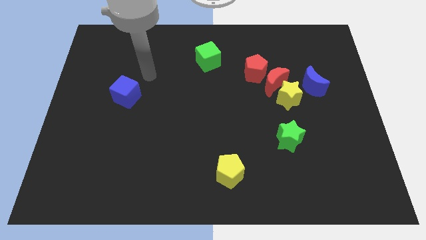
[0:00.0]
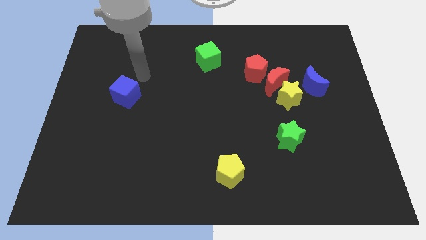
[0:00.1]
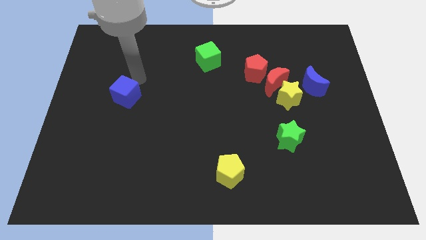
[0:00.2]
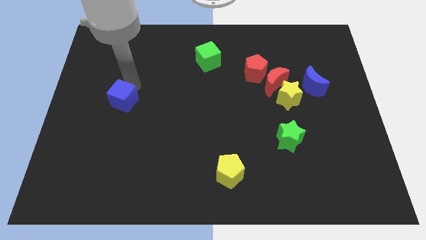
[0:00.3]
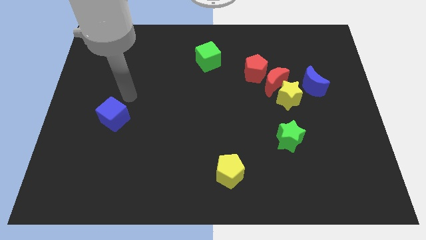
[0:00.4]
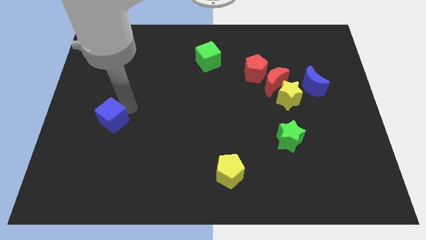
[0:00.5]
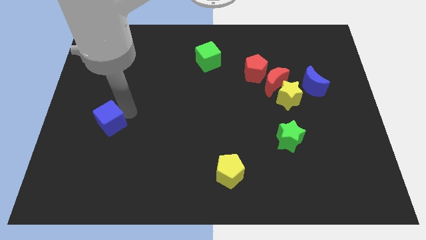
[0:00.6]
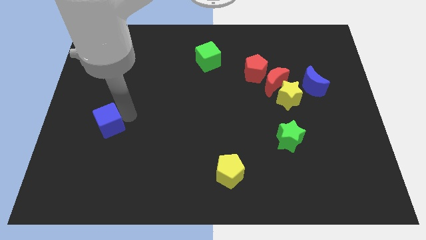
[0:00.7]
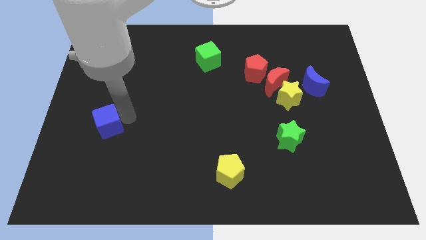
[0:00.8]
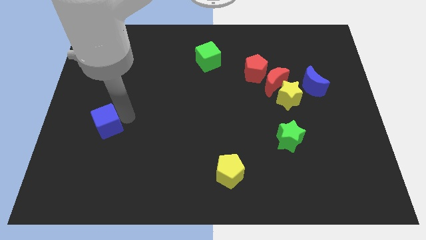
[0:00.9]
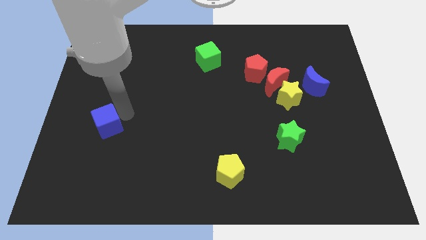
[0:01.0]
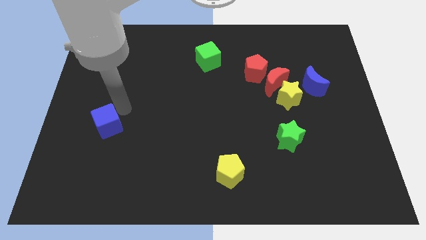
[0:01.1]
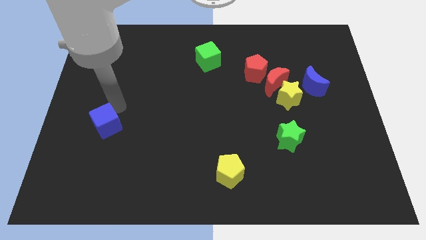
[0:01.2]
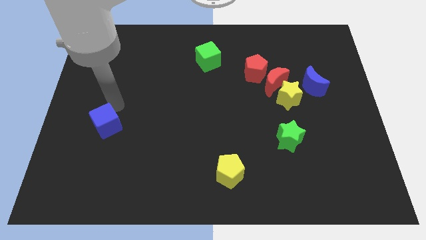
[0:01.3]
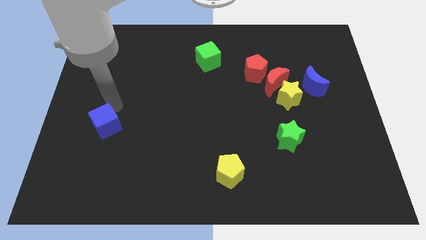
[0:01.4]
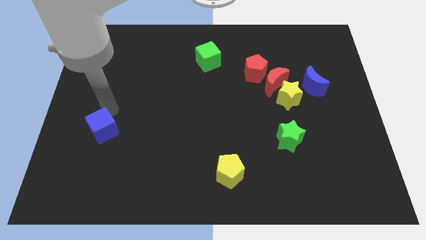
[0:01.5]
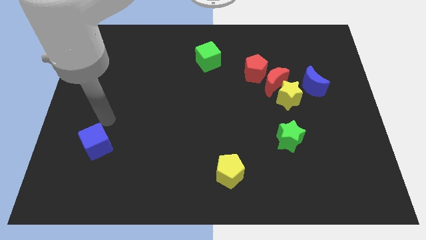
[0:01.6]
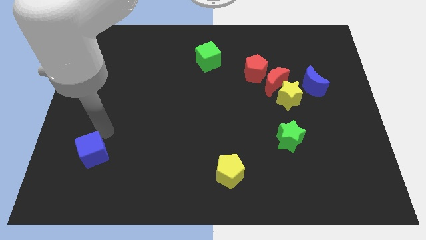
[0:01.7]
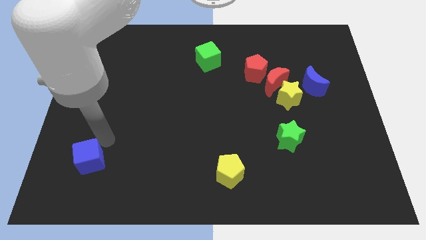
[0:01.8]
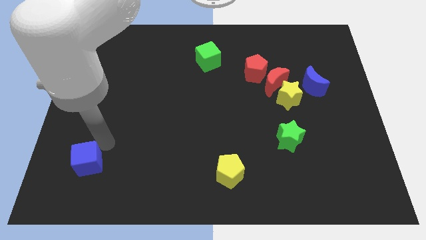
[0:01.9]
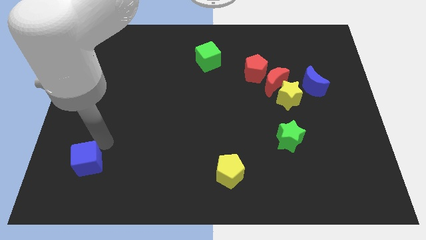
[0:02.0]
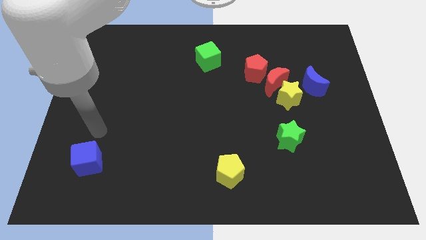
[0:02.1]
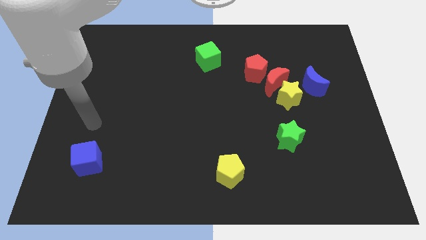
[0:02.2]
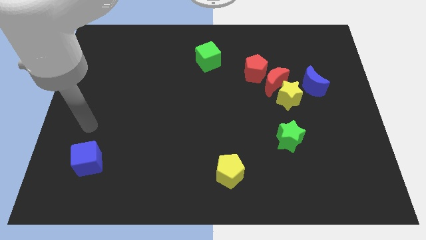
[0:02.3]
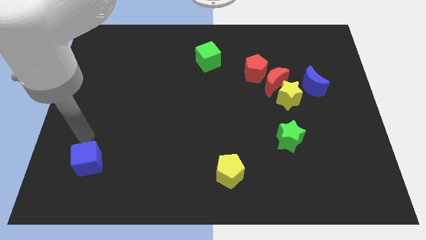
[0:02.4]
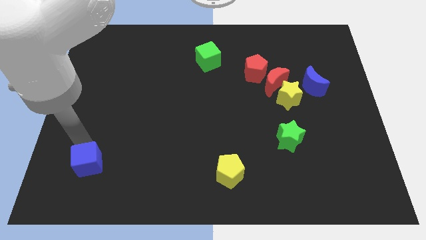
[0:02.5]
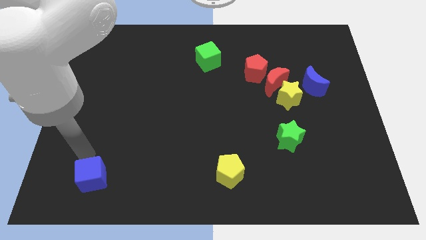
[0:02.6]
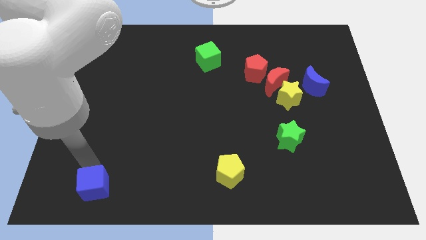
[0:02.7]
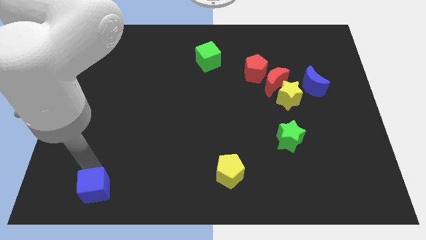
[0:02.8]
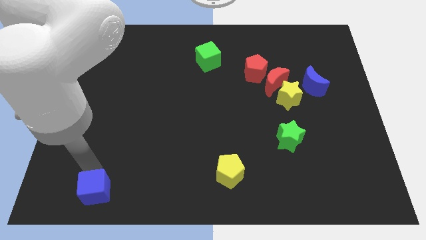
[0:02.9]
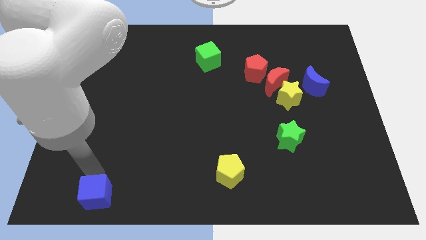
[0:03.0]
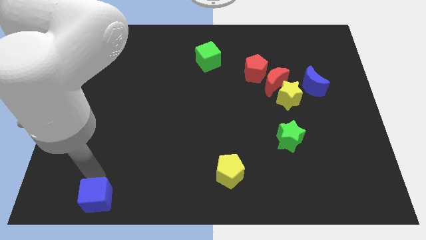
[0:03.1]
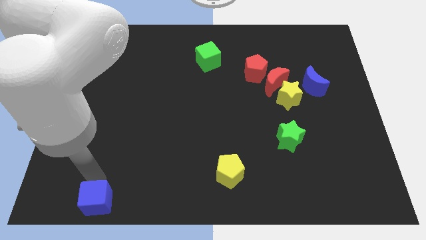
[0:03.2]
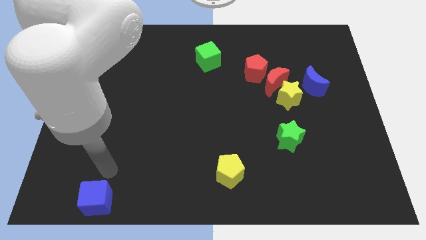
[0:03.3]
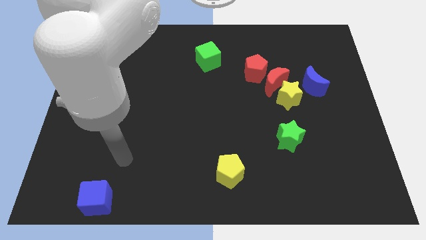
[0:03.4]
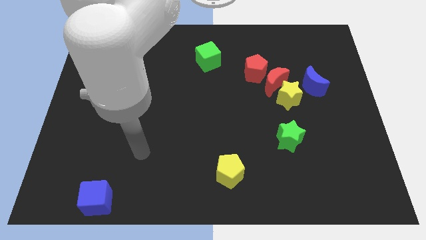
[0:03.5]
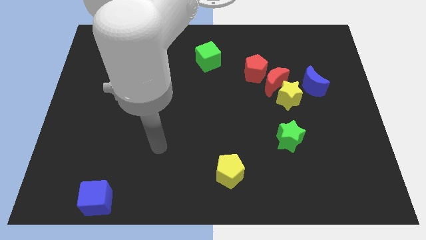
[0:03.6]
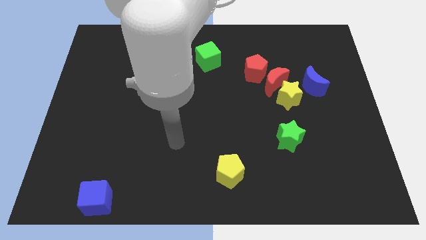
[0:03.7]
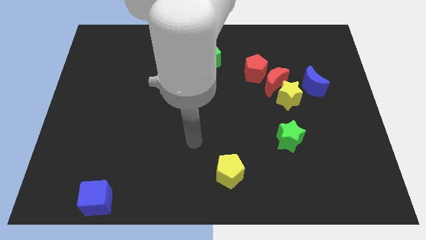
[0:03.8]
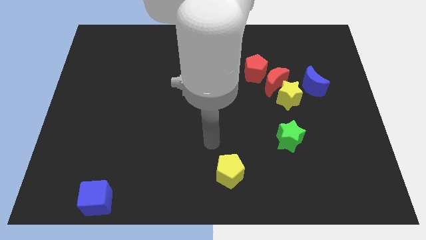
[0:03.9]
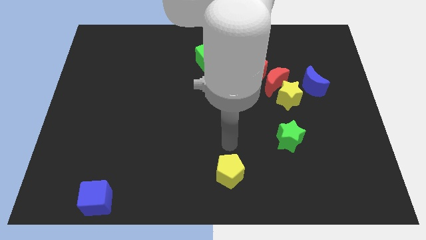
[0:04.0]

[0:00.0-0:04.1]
slide blue cube to the bottom side of the board

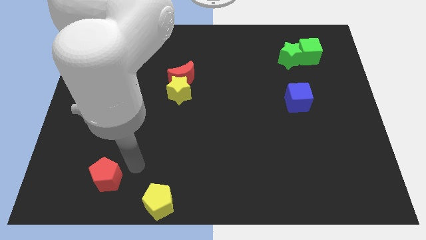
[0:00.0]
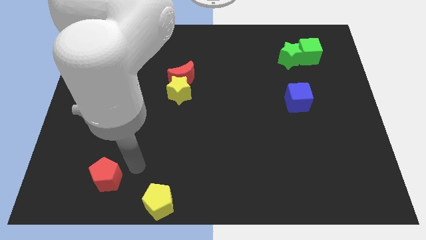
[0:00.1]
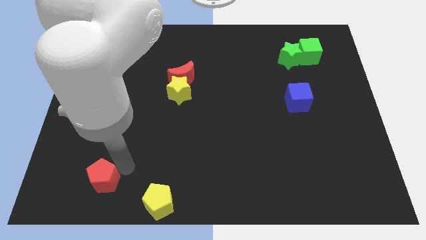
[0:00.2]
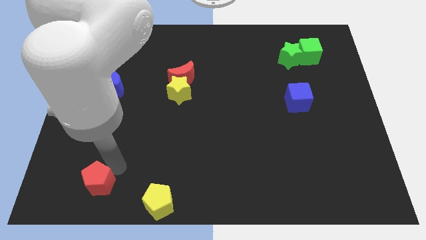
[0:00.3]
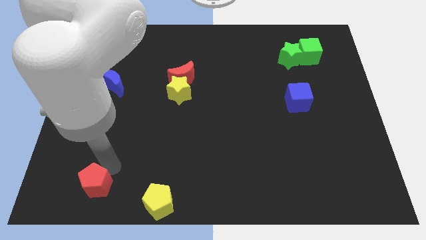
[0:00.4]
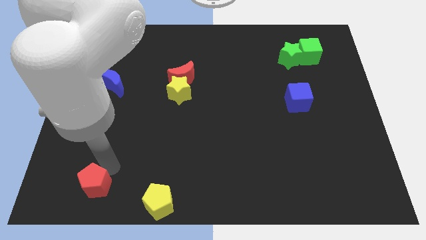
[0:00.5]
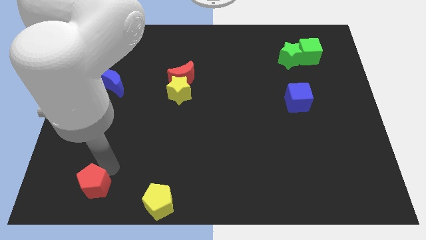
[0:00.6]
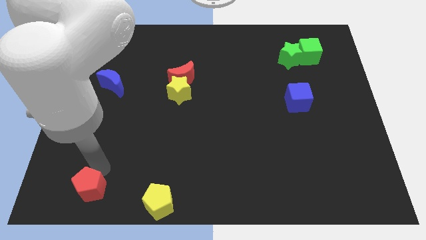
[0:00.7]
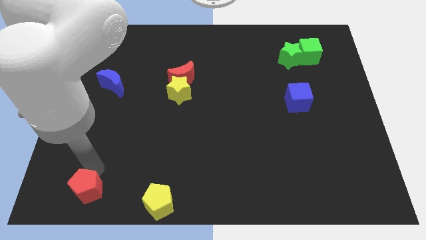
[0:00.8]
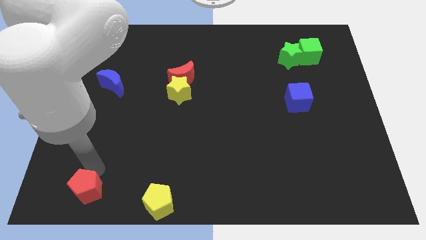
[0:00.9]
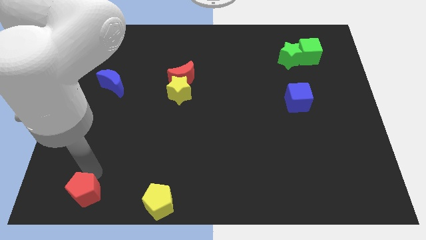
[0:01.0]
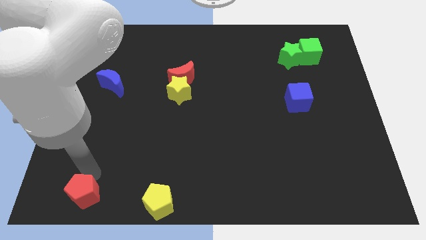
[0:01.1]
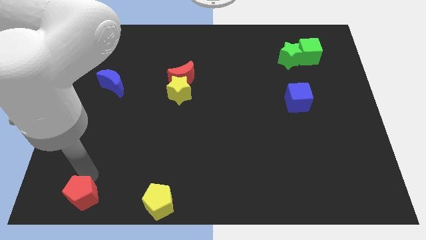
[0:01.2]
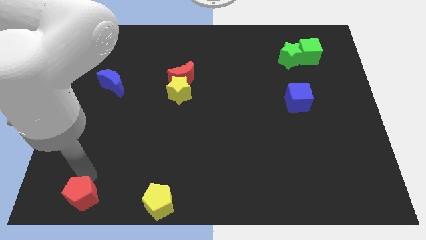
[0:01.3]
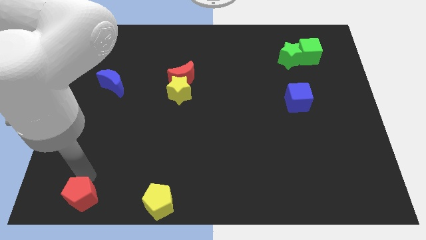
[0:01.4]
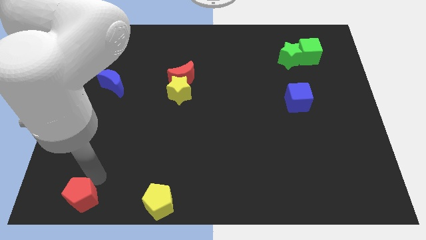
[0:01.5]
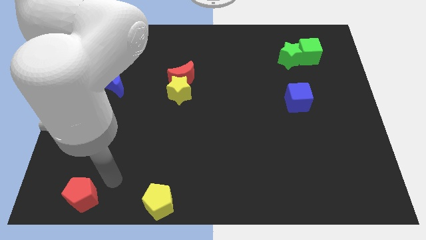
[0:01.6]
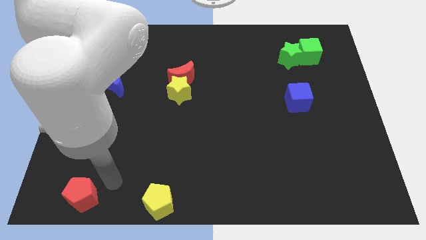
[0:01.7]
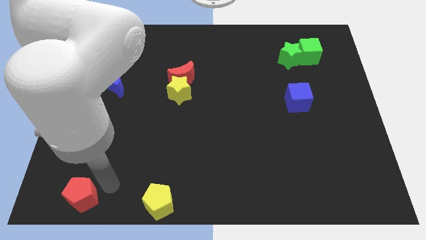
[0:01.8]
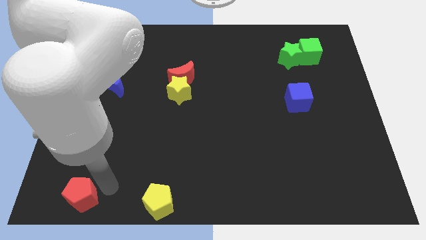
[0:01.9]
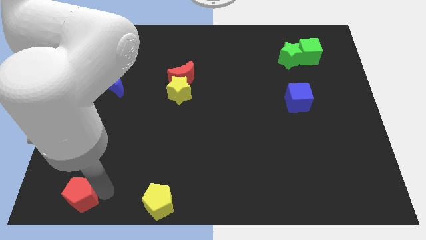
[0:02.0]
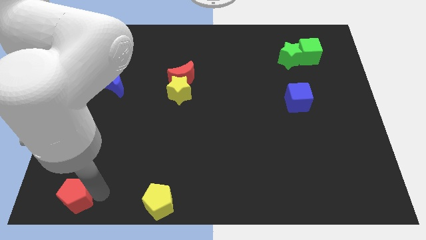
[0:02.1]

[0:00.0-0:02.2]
move the red crescent to the bottom

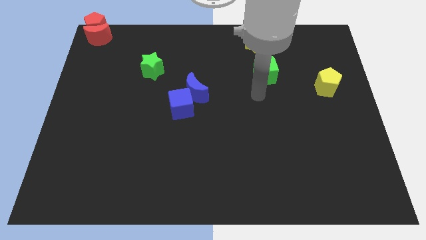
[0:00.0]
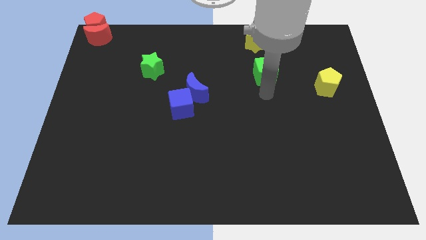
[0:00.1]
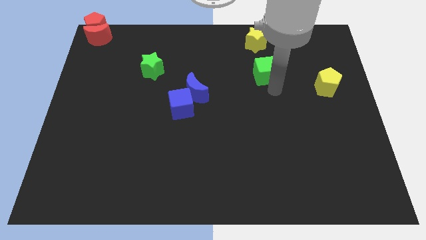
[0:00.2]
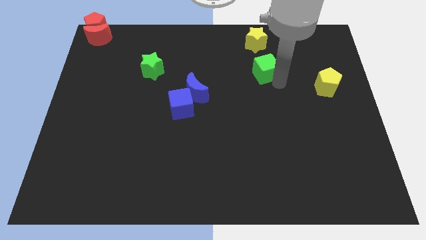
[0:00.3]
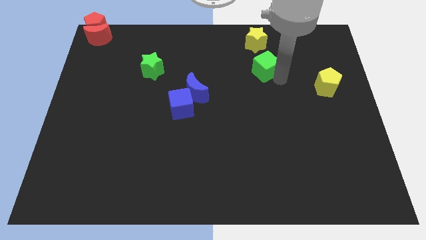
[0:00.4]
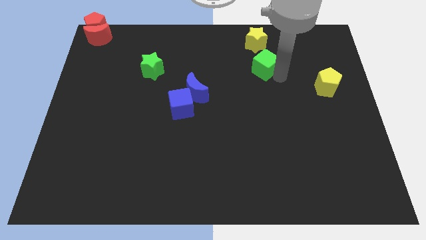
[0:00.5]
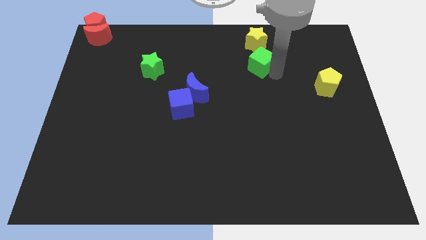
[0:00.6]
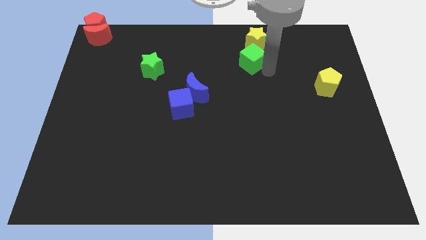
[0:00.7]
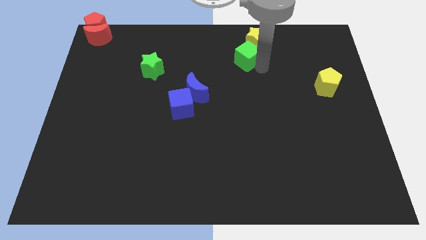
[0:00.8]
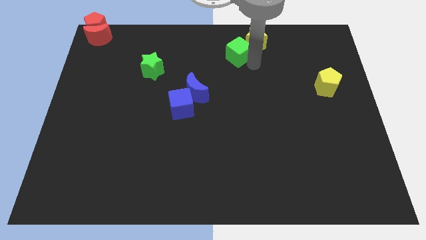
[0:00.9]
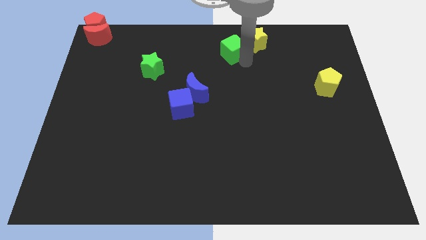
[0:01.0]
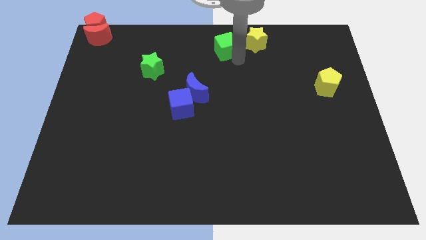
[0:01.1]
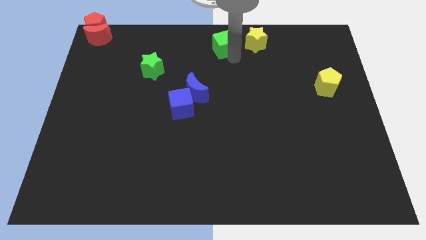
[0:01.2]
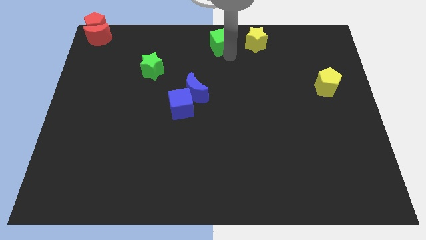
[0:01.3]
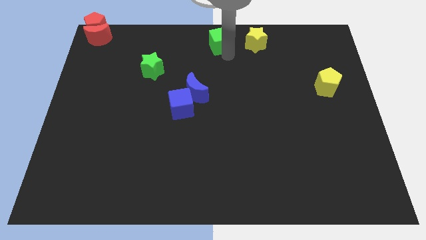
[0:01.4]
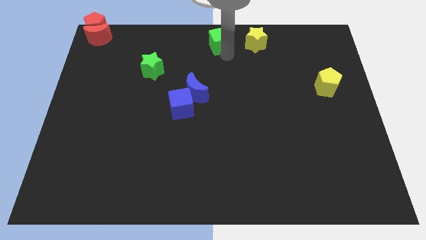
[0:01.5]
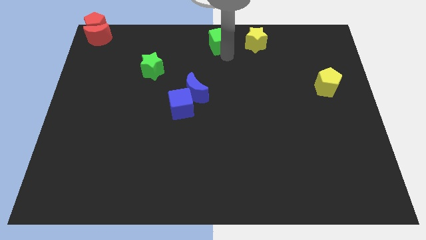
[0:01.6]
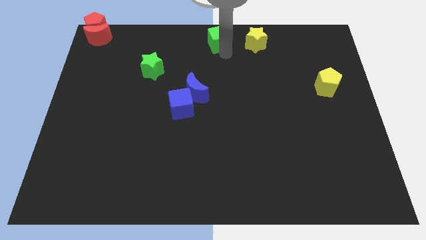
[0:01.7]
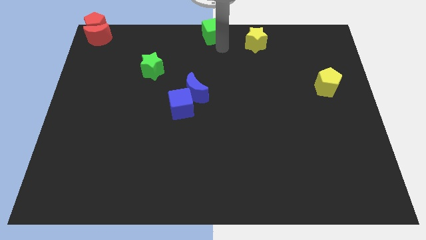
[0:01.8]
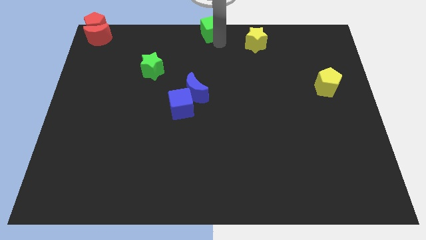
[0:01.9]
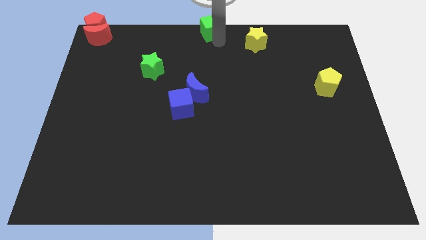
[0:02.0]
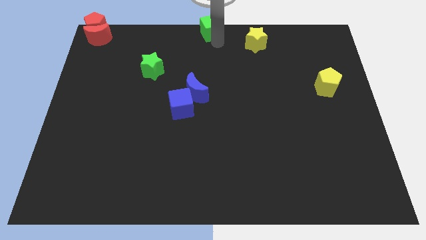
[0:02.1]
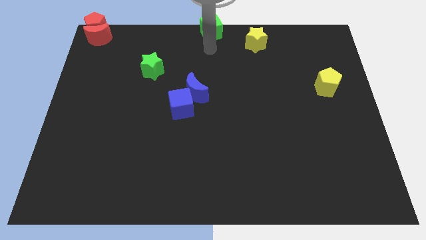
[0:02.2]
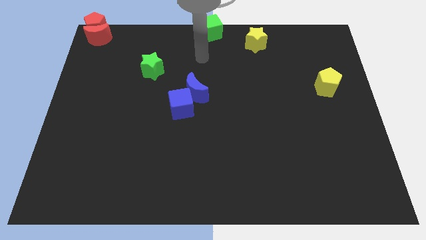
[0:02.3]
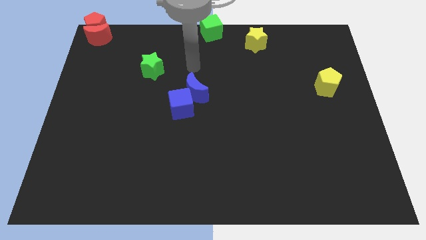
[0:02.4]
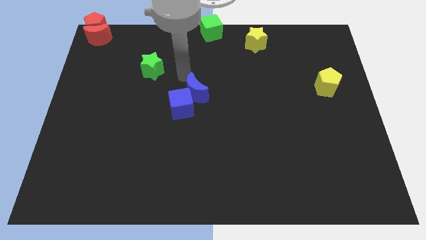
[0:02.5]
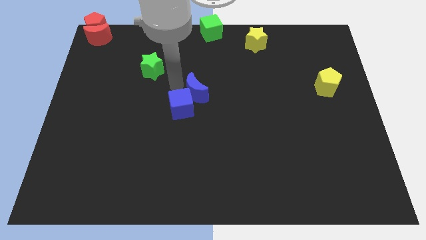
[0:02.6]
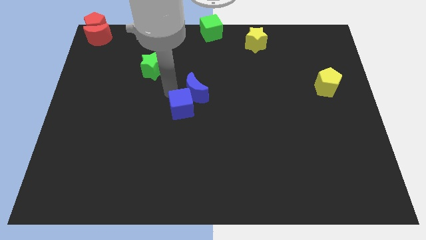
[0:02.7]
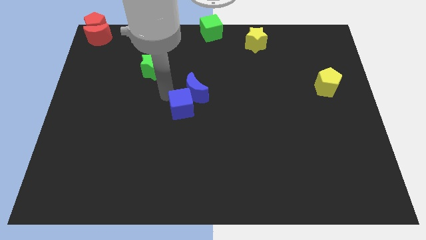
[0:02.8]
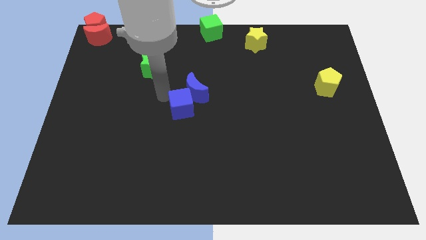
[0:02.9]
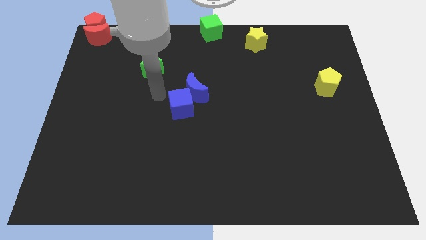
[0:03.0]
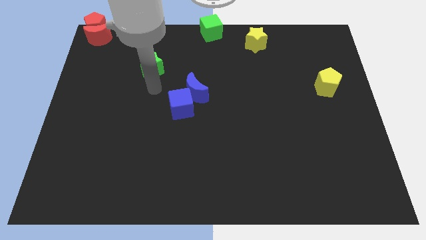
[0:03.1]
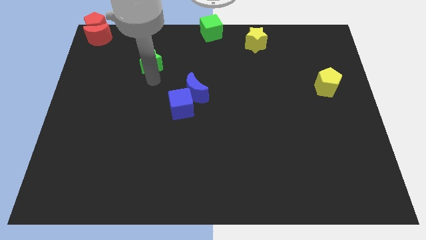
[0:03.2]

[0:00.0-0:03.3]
move the green cube to the top center of the board
